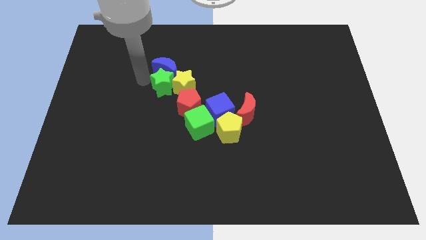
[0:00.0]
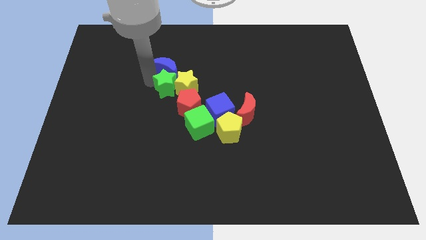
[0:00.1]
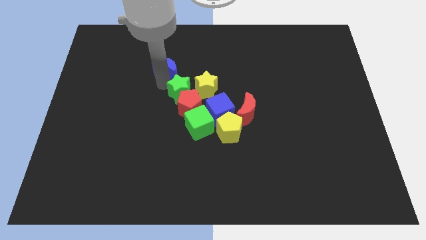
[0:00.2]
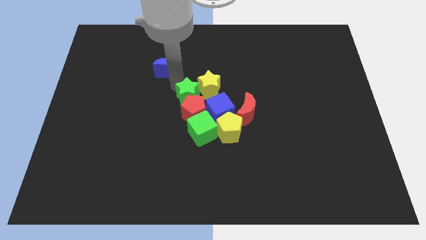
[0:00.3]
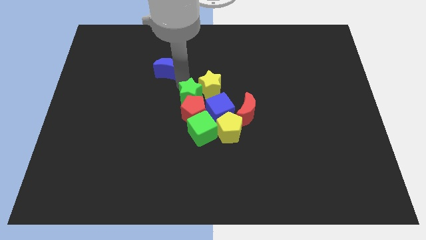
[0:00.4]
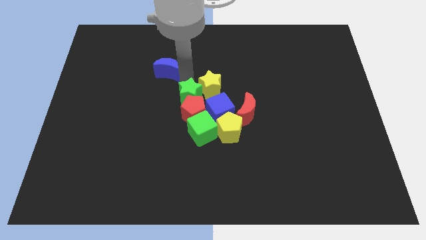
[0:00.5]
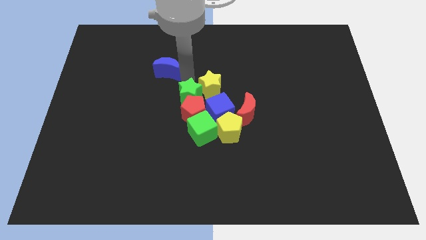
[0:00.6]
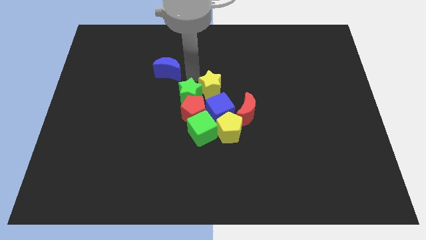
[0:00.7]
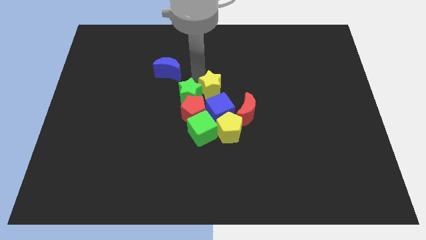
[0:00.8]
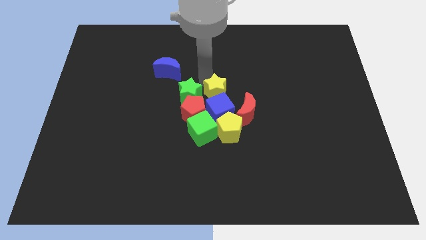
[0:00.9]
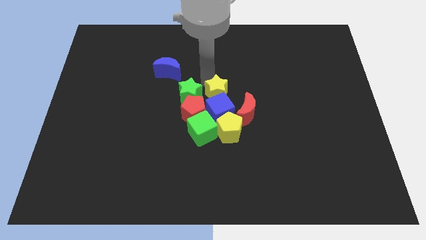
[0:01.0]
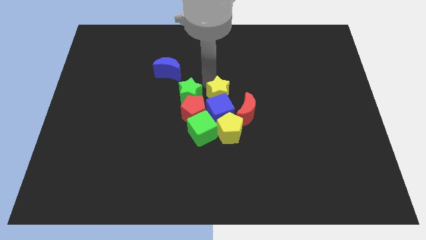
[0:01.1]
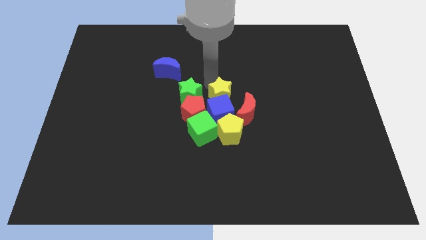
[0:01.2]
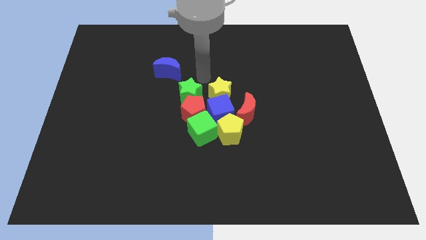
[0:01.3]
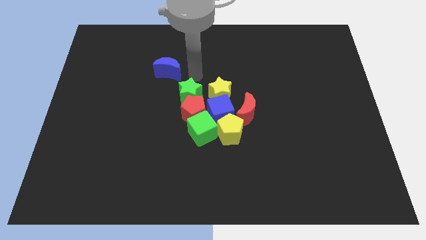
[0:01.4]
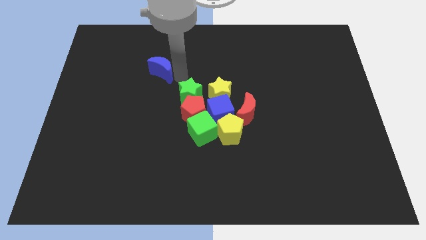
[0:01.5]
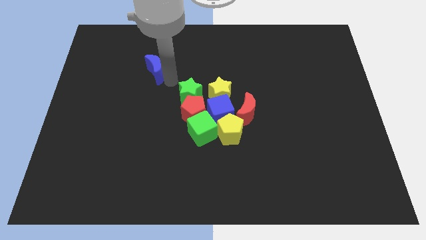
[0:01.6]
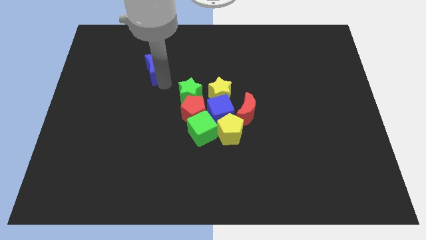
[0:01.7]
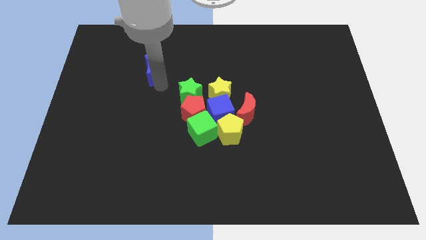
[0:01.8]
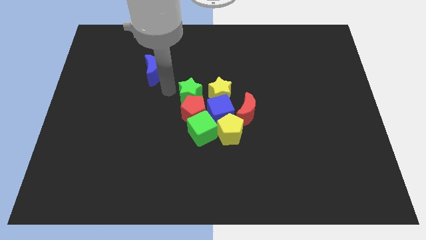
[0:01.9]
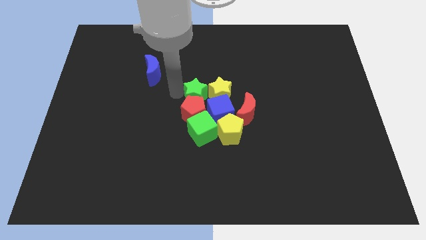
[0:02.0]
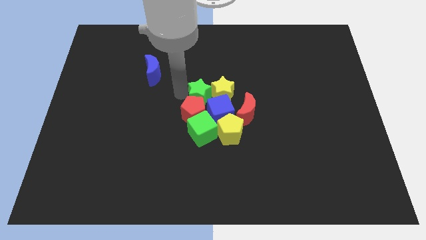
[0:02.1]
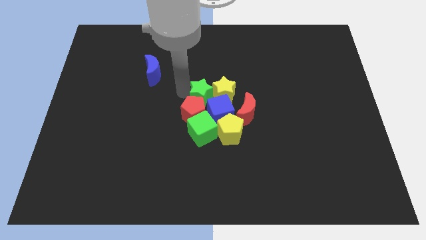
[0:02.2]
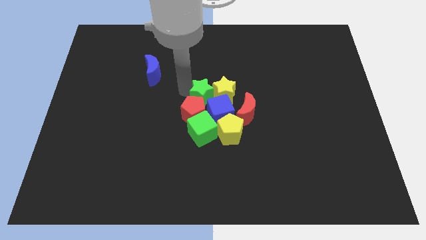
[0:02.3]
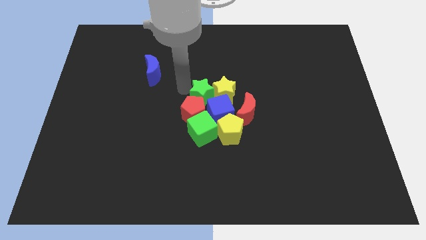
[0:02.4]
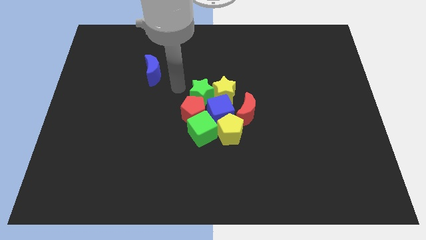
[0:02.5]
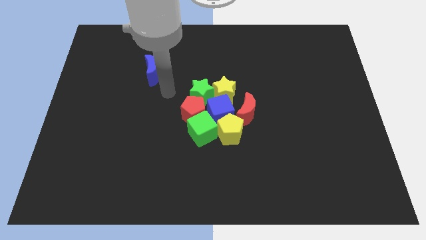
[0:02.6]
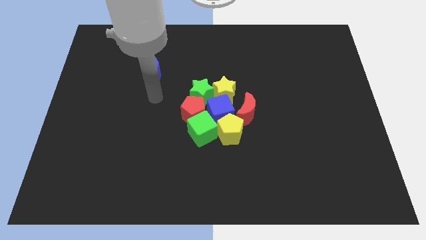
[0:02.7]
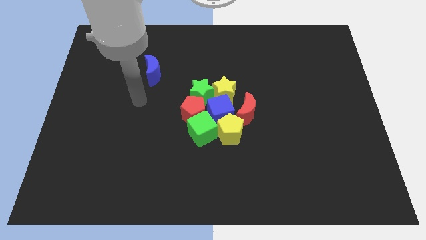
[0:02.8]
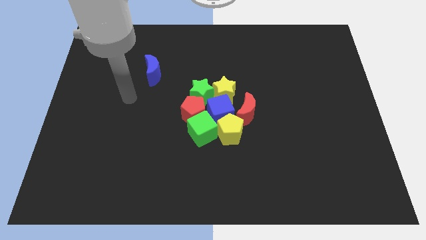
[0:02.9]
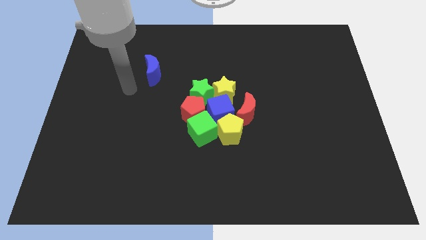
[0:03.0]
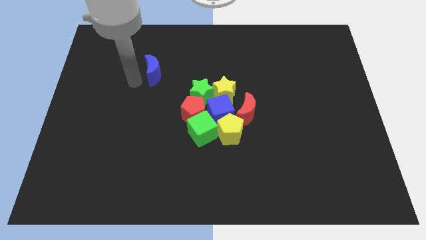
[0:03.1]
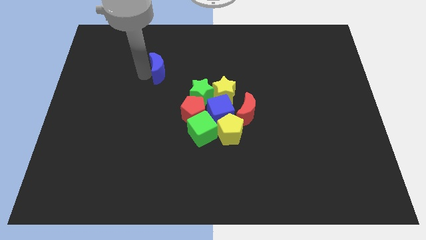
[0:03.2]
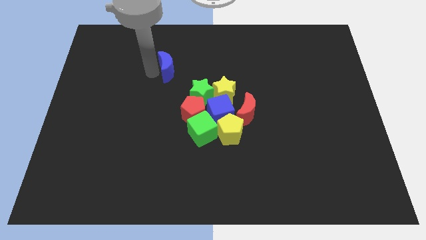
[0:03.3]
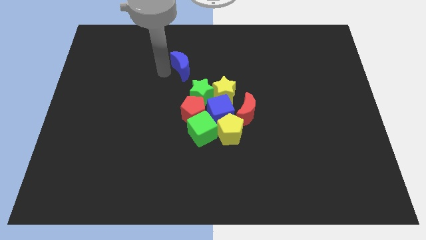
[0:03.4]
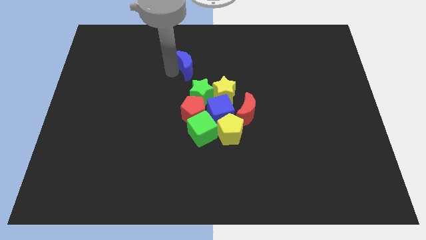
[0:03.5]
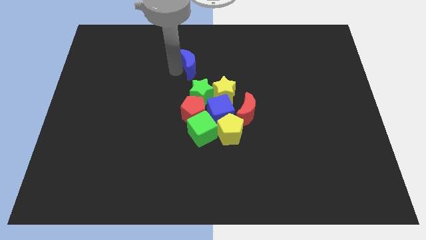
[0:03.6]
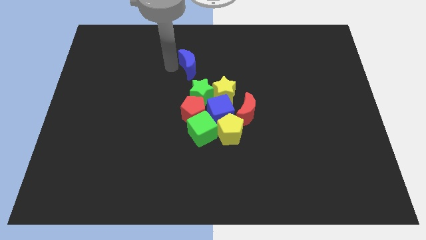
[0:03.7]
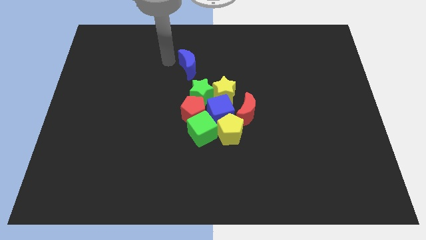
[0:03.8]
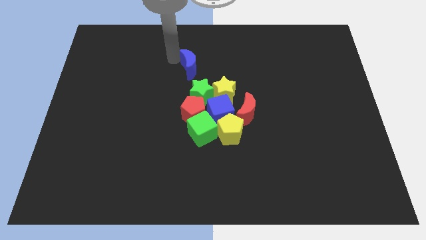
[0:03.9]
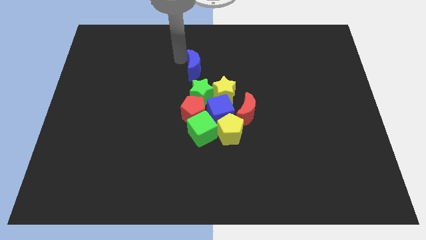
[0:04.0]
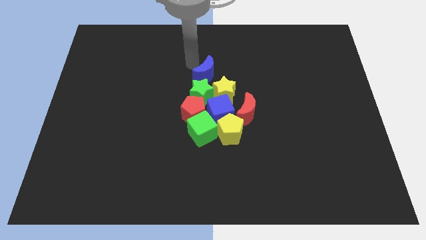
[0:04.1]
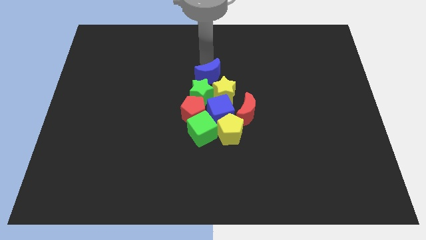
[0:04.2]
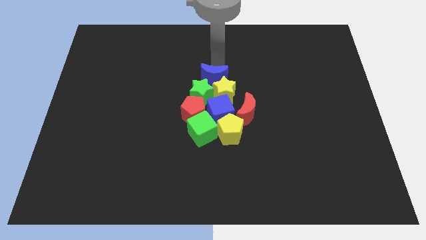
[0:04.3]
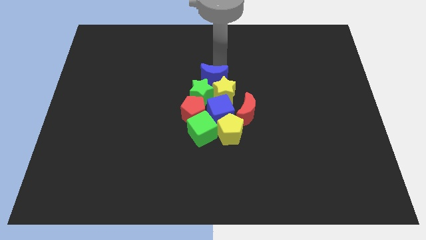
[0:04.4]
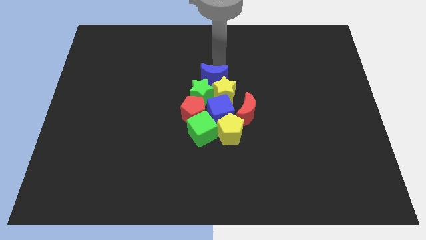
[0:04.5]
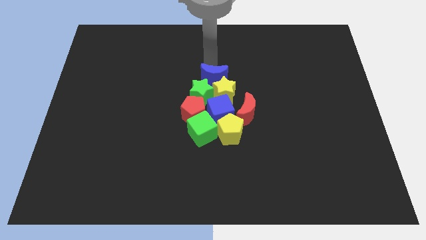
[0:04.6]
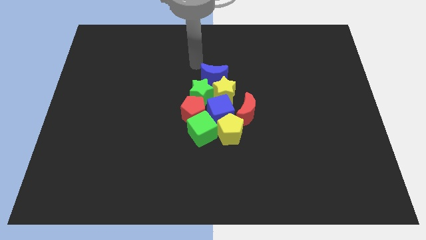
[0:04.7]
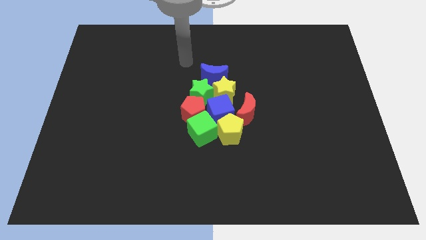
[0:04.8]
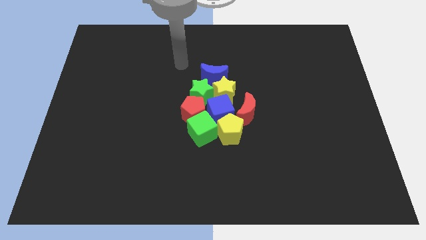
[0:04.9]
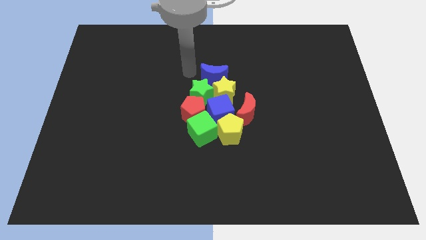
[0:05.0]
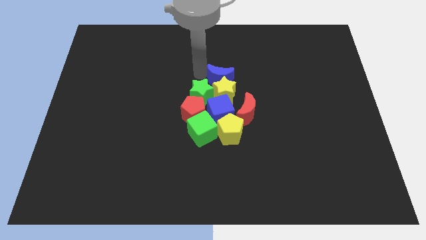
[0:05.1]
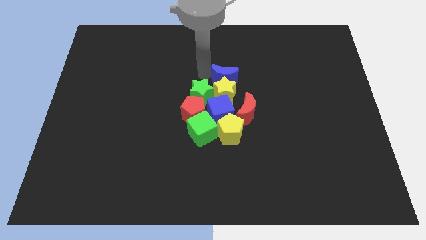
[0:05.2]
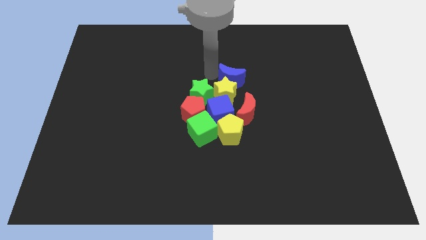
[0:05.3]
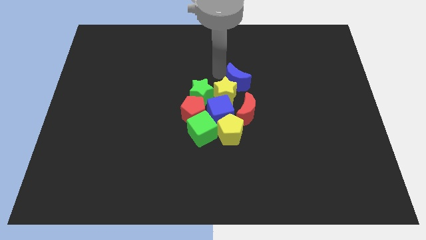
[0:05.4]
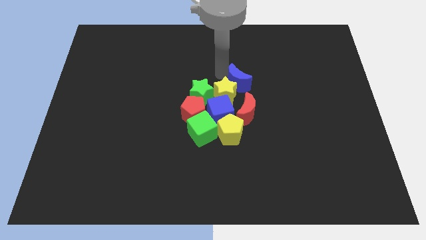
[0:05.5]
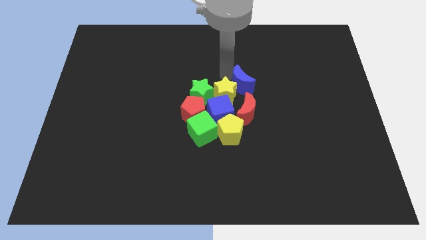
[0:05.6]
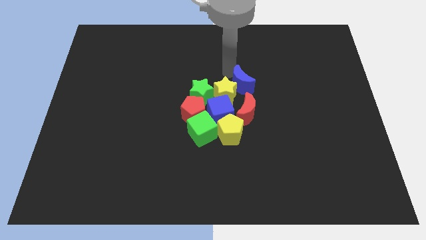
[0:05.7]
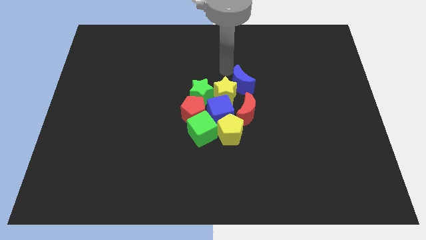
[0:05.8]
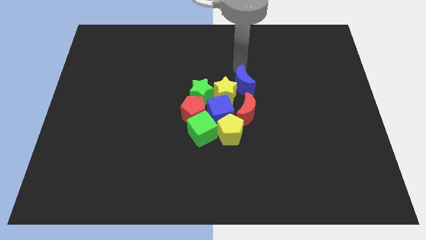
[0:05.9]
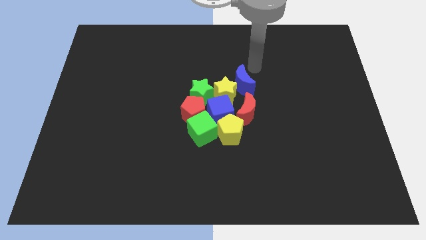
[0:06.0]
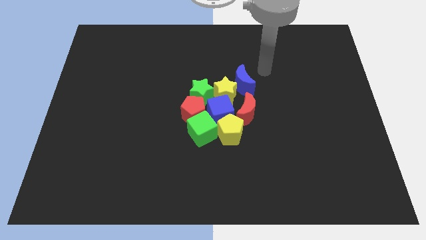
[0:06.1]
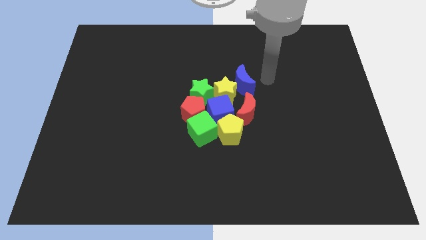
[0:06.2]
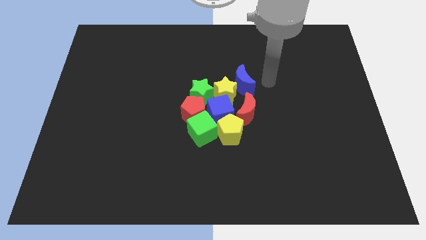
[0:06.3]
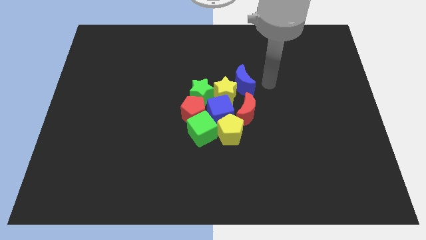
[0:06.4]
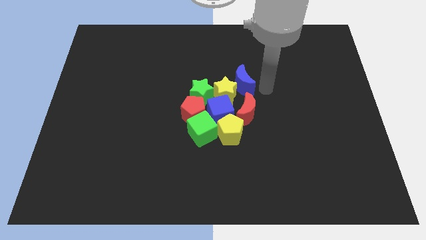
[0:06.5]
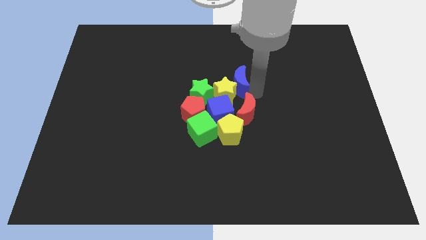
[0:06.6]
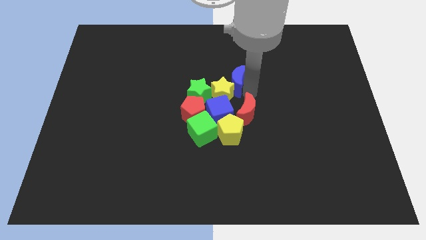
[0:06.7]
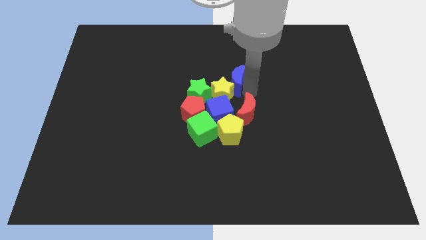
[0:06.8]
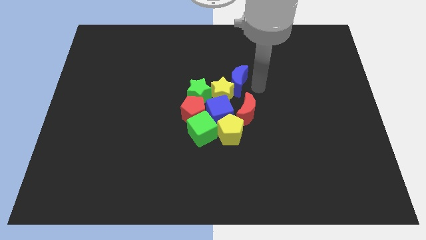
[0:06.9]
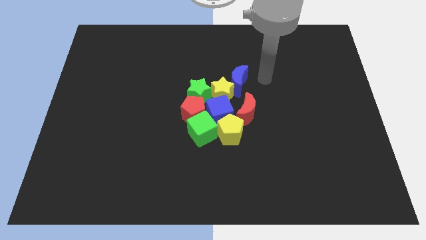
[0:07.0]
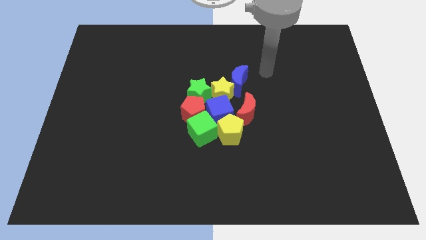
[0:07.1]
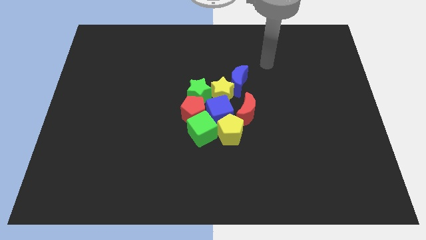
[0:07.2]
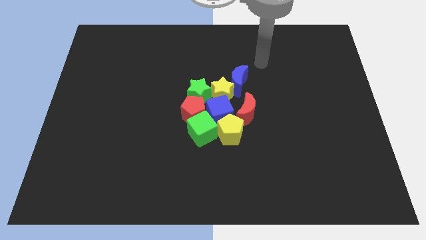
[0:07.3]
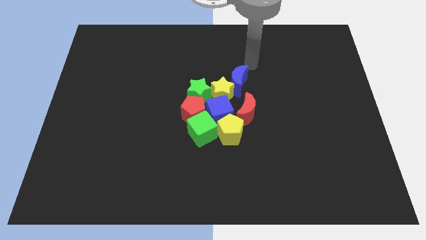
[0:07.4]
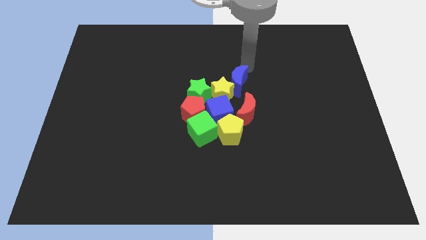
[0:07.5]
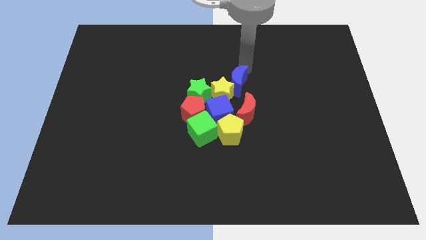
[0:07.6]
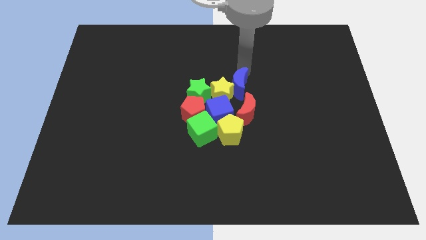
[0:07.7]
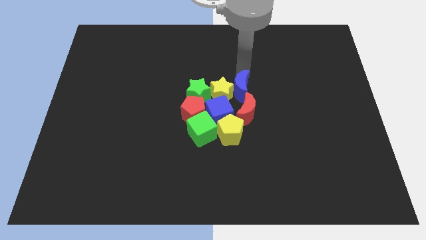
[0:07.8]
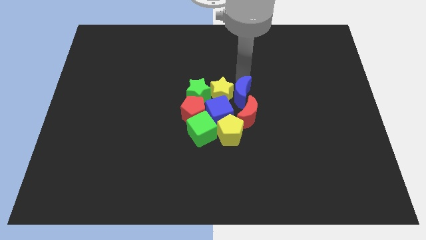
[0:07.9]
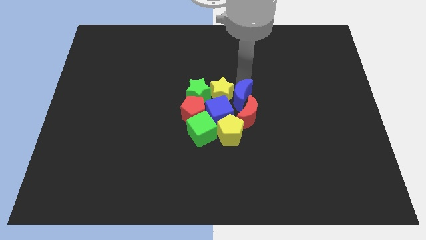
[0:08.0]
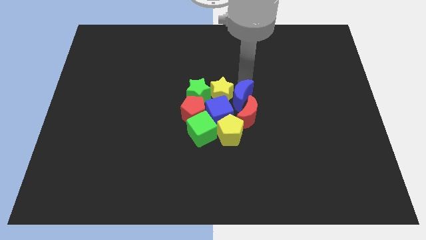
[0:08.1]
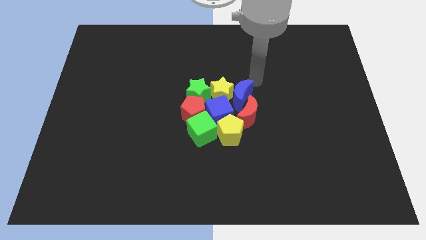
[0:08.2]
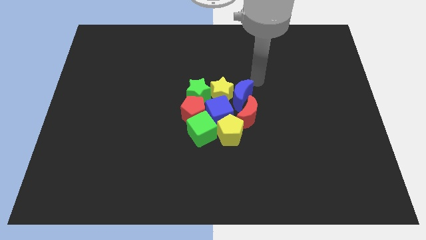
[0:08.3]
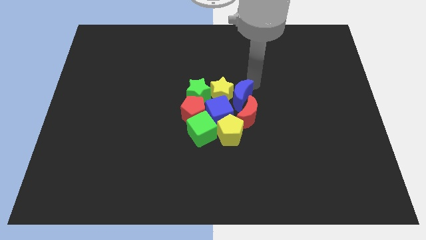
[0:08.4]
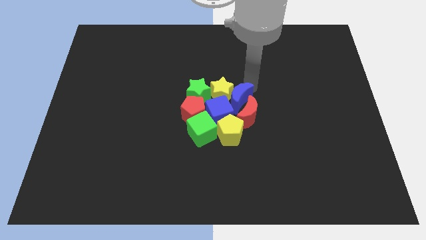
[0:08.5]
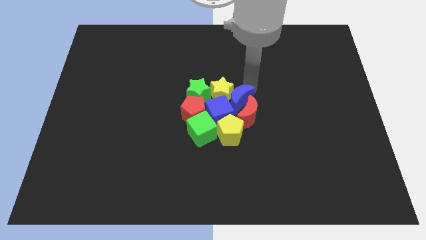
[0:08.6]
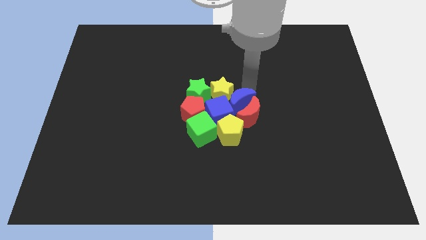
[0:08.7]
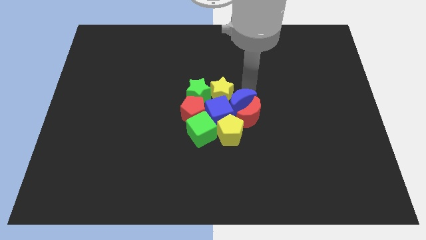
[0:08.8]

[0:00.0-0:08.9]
make a group of all the blocks at the center of the board
